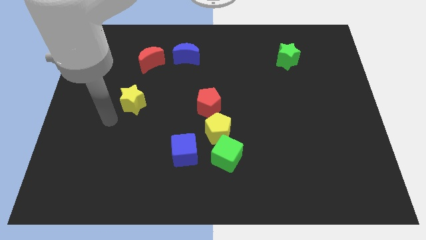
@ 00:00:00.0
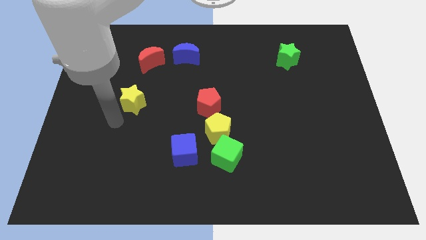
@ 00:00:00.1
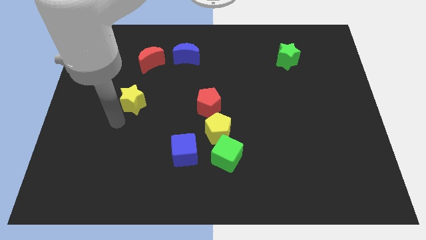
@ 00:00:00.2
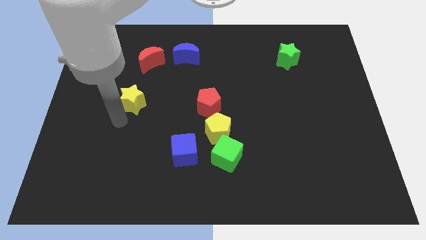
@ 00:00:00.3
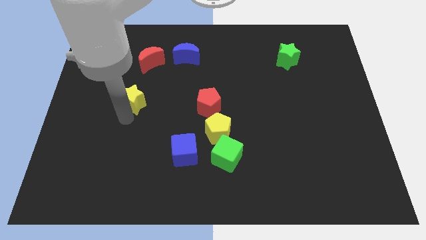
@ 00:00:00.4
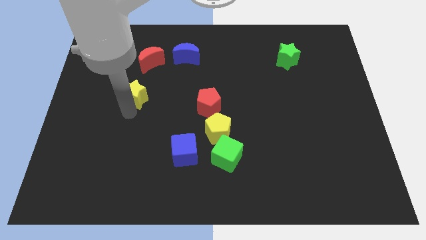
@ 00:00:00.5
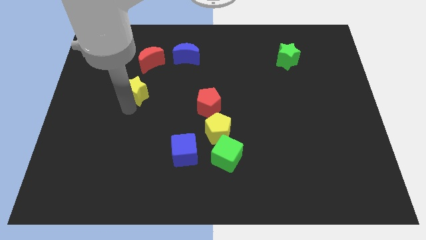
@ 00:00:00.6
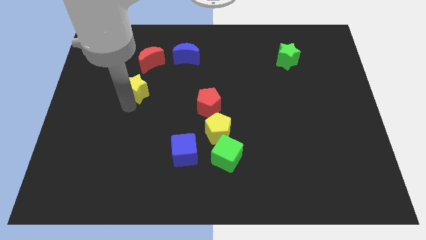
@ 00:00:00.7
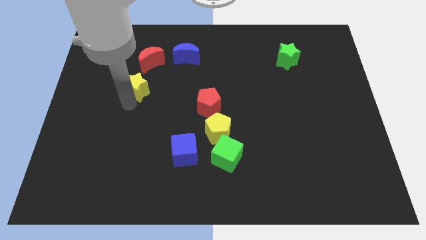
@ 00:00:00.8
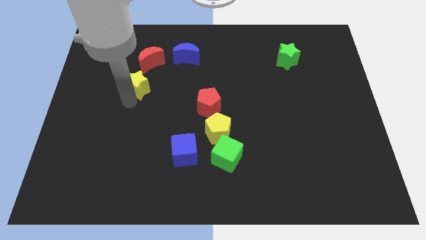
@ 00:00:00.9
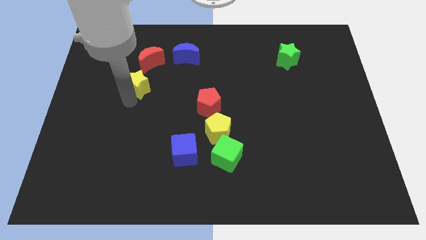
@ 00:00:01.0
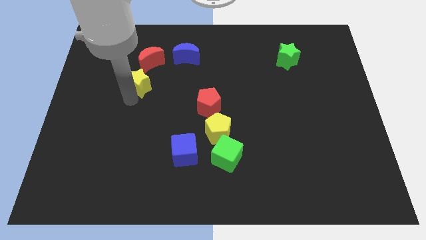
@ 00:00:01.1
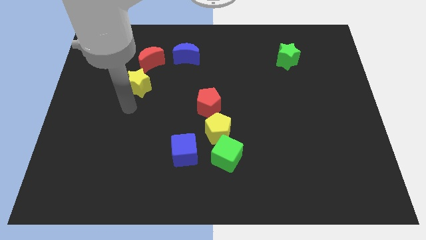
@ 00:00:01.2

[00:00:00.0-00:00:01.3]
place the yellow star below the red crescent

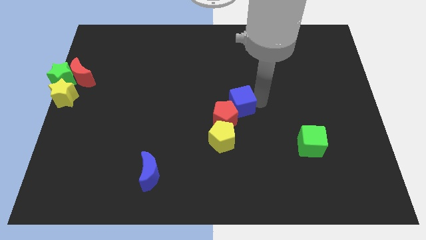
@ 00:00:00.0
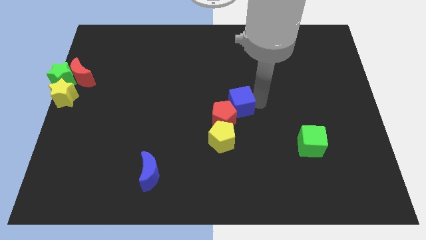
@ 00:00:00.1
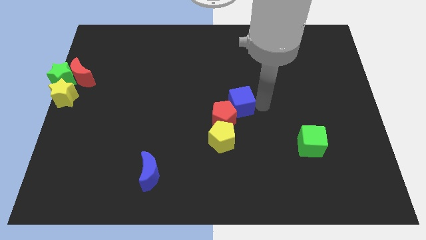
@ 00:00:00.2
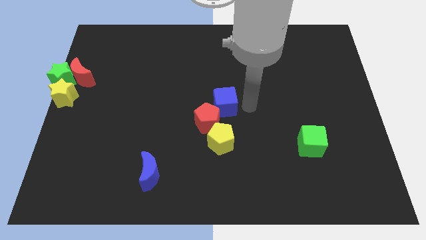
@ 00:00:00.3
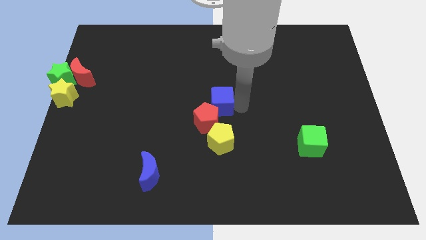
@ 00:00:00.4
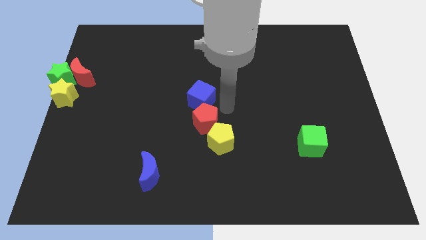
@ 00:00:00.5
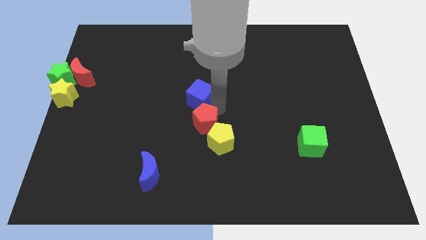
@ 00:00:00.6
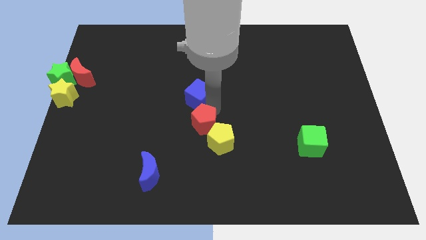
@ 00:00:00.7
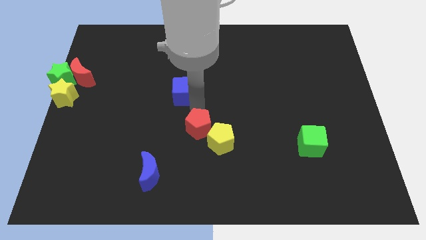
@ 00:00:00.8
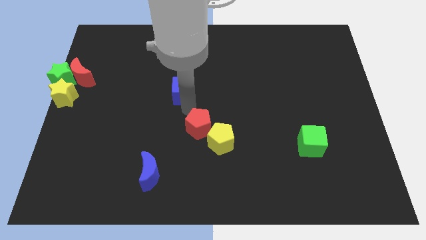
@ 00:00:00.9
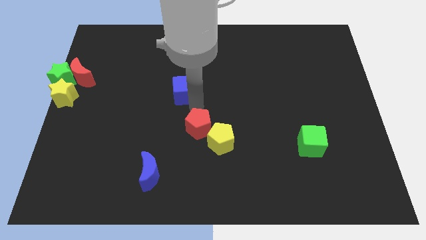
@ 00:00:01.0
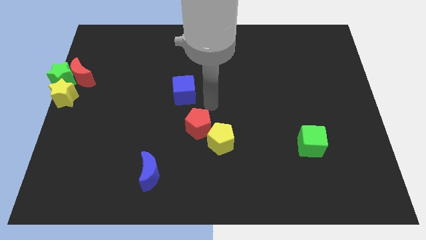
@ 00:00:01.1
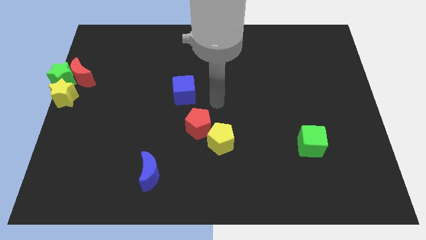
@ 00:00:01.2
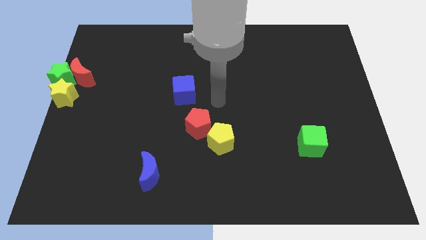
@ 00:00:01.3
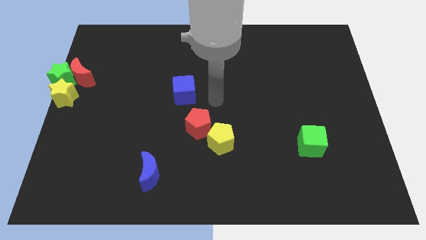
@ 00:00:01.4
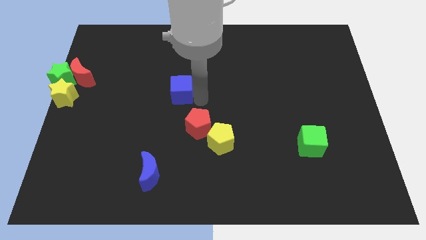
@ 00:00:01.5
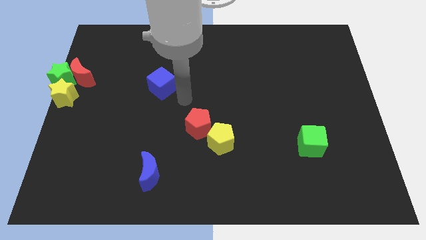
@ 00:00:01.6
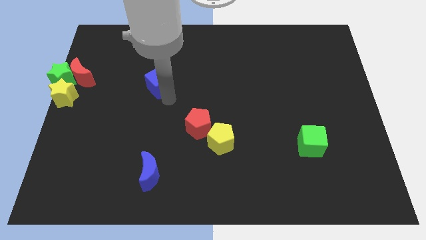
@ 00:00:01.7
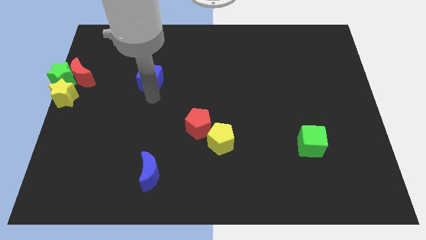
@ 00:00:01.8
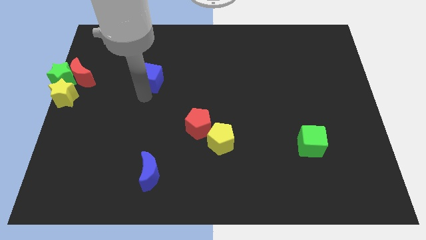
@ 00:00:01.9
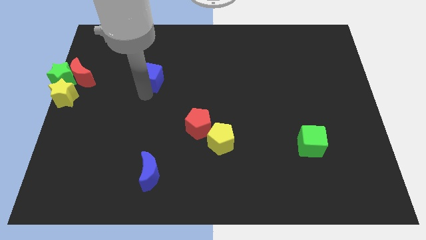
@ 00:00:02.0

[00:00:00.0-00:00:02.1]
separate the blue cube from the red pentagon

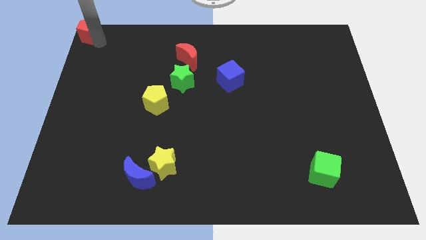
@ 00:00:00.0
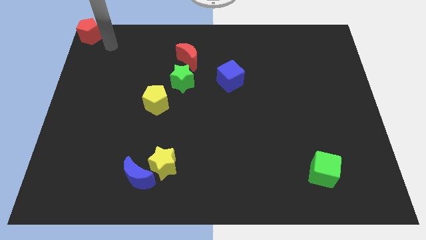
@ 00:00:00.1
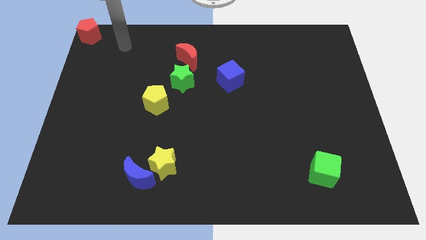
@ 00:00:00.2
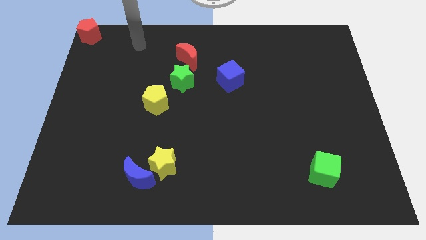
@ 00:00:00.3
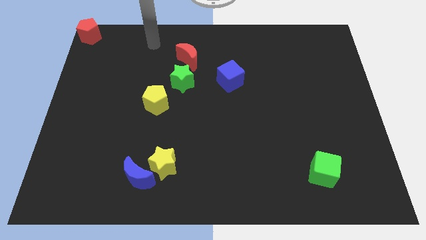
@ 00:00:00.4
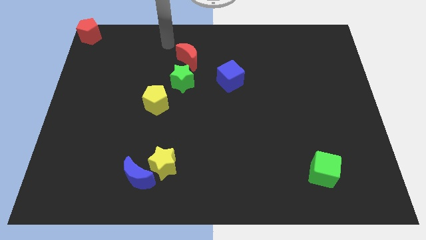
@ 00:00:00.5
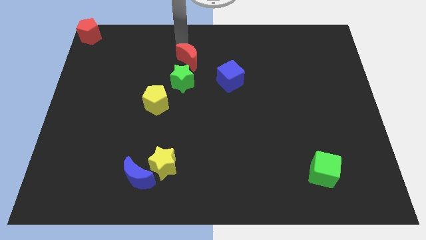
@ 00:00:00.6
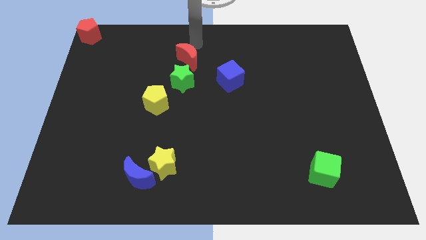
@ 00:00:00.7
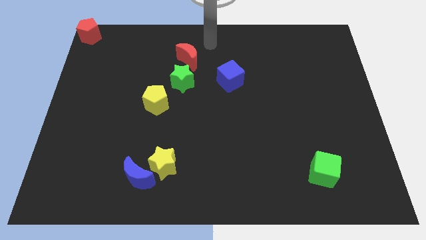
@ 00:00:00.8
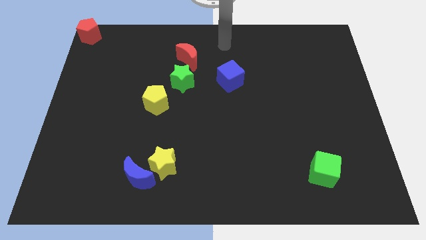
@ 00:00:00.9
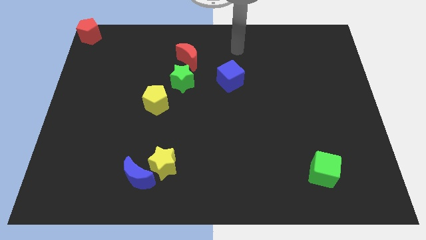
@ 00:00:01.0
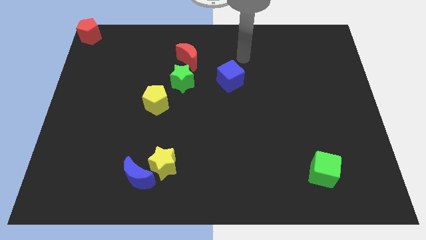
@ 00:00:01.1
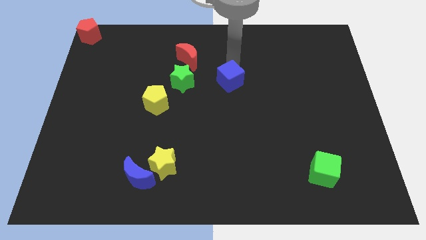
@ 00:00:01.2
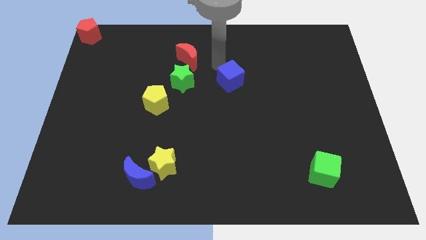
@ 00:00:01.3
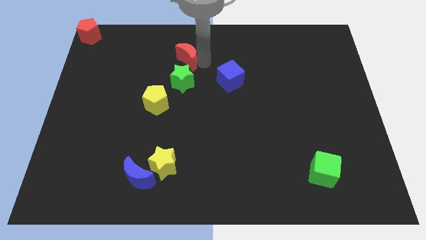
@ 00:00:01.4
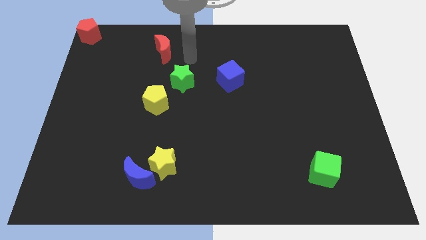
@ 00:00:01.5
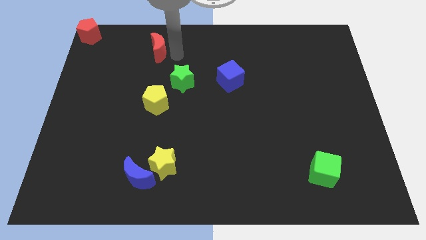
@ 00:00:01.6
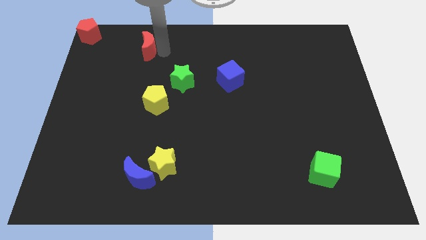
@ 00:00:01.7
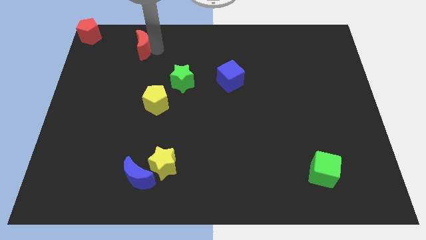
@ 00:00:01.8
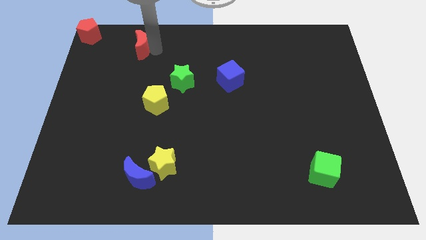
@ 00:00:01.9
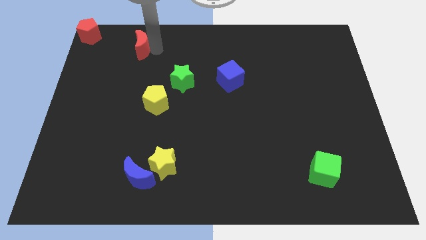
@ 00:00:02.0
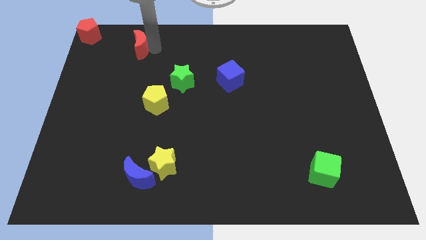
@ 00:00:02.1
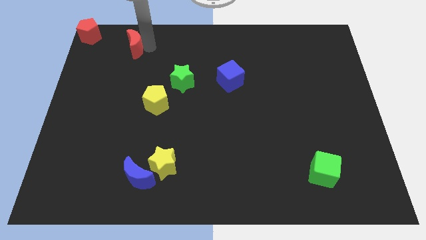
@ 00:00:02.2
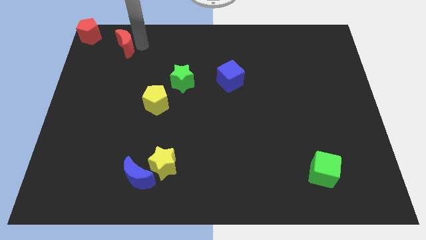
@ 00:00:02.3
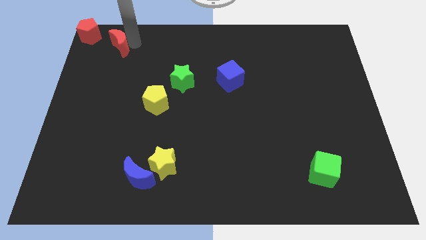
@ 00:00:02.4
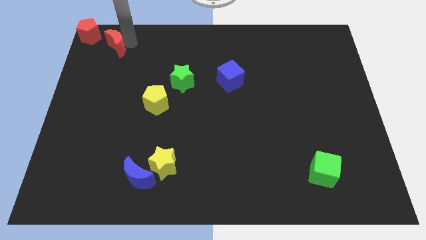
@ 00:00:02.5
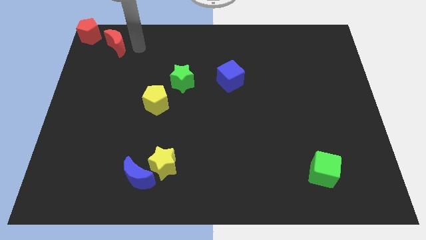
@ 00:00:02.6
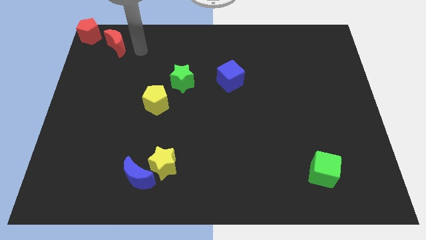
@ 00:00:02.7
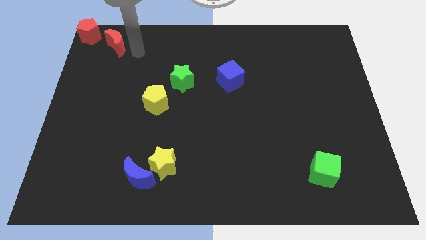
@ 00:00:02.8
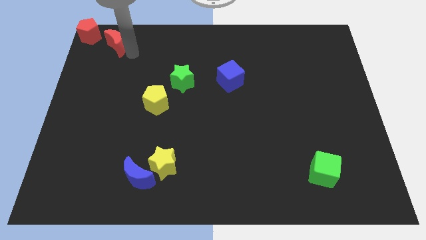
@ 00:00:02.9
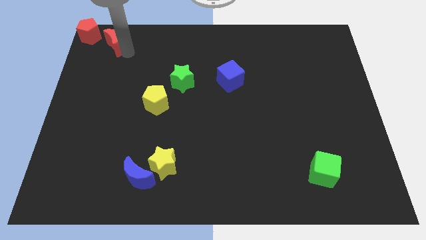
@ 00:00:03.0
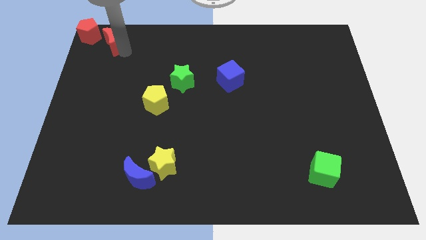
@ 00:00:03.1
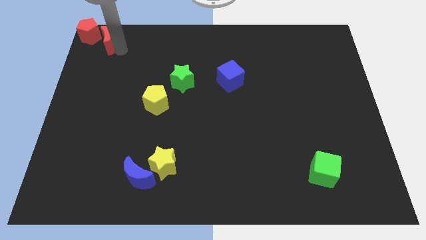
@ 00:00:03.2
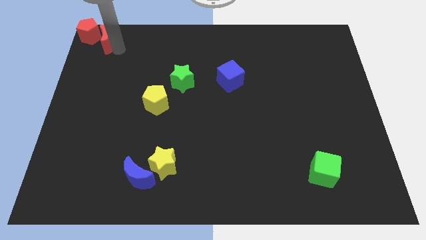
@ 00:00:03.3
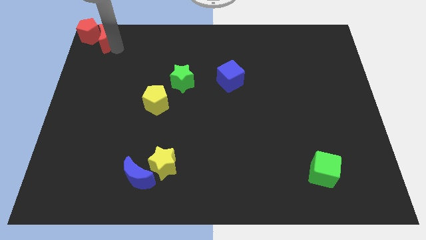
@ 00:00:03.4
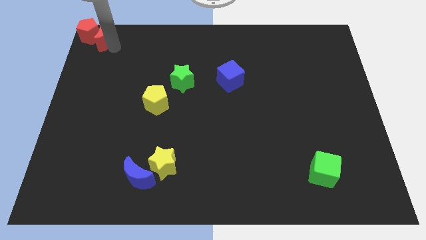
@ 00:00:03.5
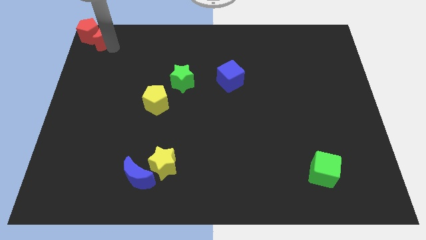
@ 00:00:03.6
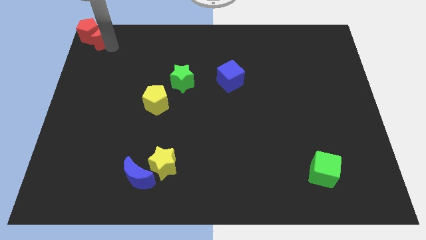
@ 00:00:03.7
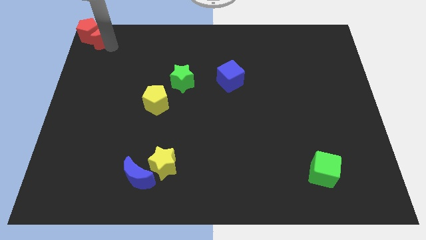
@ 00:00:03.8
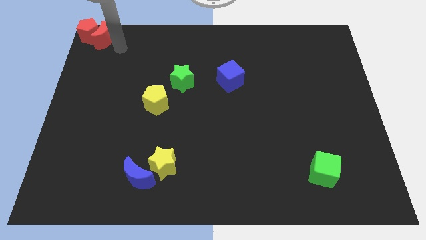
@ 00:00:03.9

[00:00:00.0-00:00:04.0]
push the red crescent to the right of the red pentagon

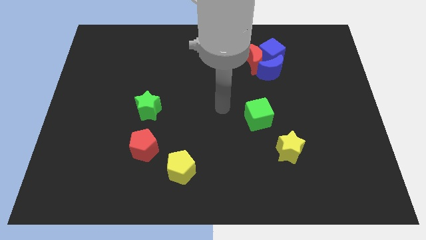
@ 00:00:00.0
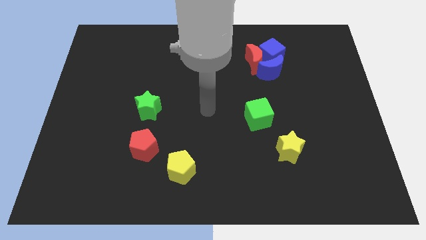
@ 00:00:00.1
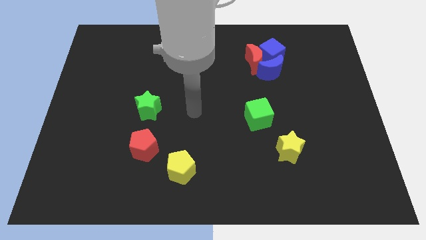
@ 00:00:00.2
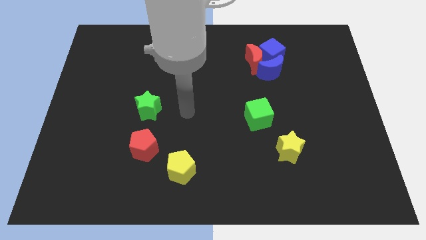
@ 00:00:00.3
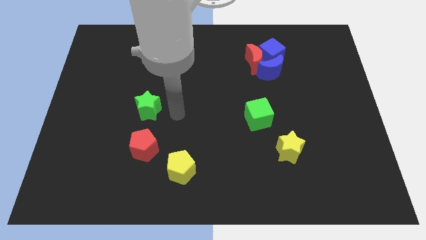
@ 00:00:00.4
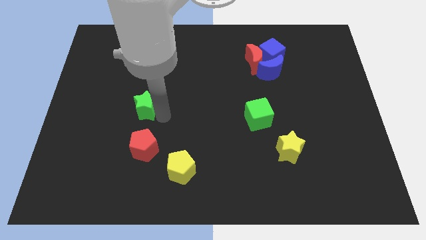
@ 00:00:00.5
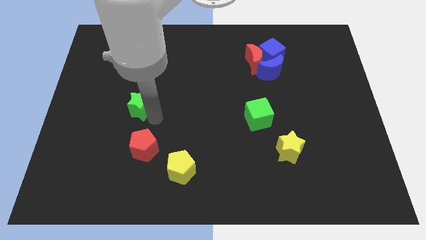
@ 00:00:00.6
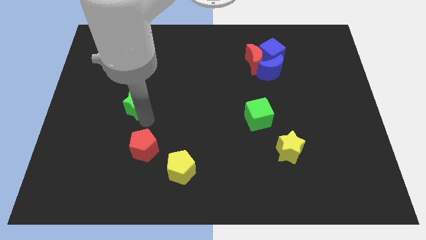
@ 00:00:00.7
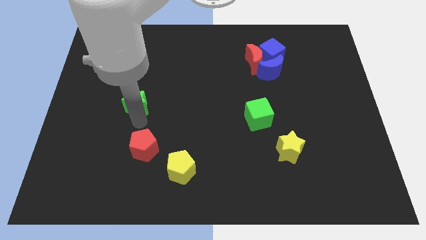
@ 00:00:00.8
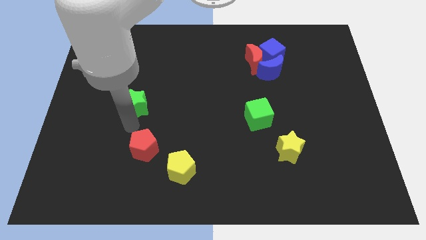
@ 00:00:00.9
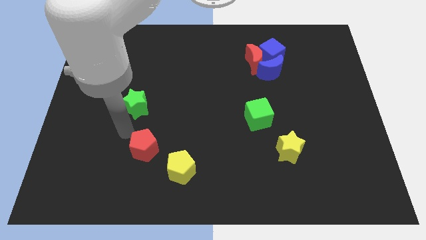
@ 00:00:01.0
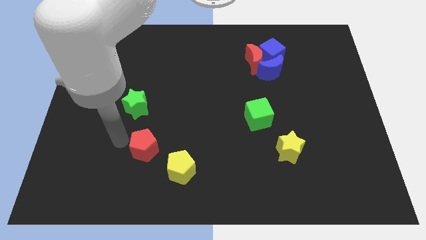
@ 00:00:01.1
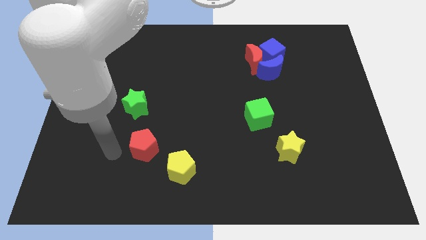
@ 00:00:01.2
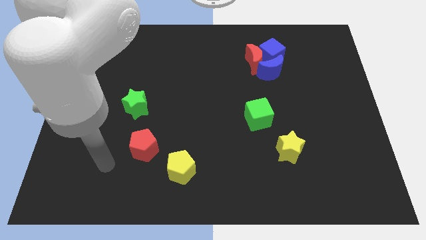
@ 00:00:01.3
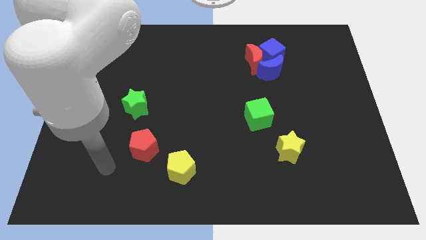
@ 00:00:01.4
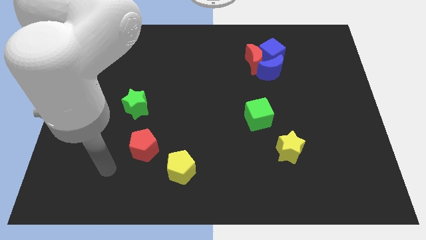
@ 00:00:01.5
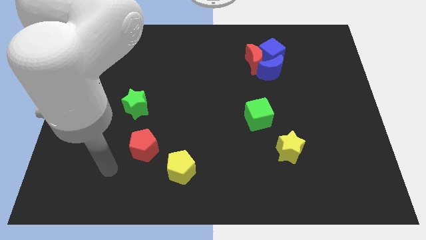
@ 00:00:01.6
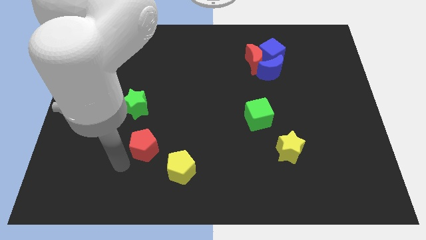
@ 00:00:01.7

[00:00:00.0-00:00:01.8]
slightly push the green star to the top of the board
